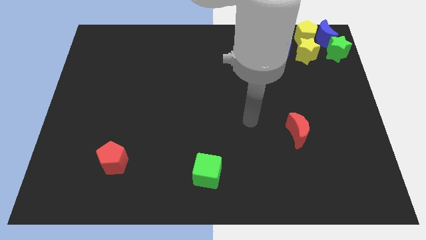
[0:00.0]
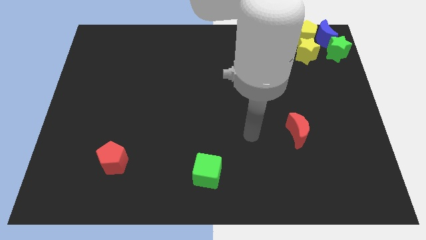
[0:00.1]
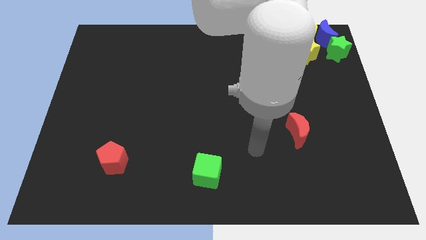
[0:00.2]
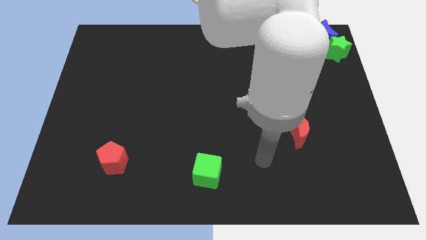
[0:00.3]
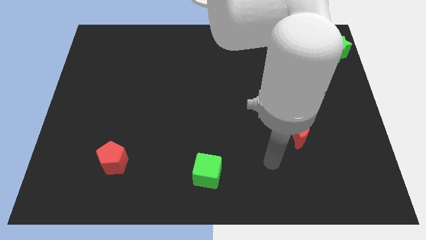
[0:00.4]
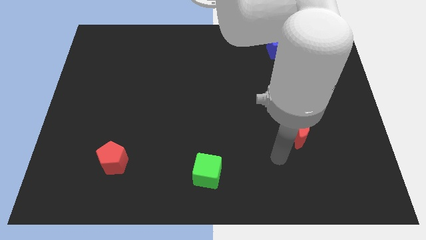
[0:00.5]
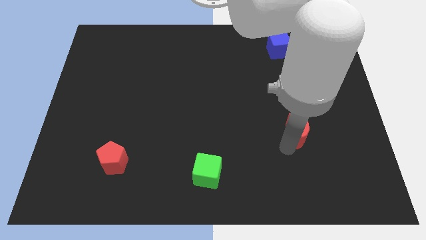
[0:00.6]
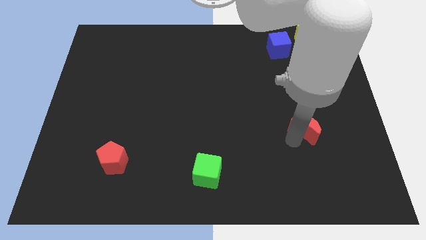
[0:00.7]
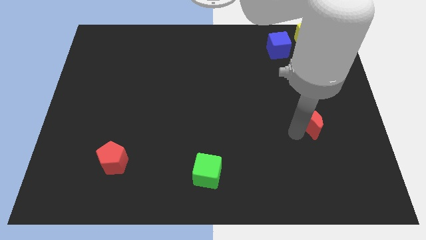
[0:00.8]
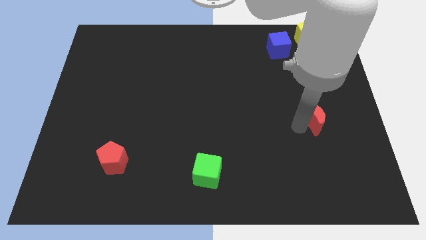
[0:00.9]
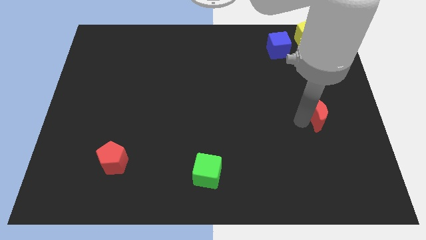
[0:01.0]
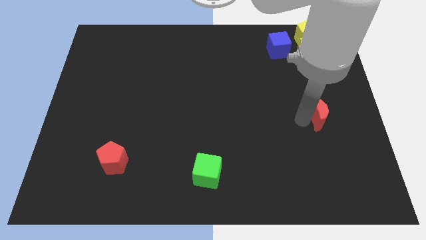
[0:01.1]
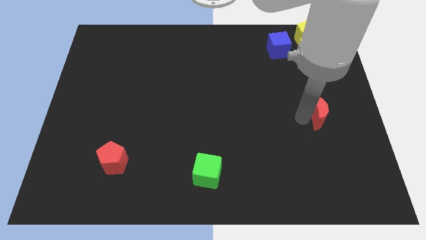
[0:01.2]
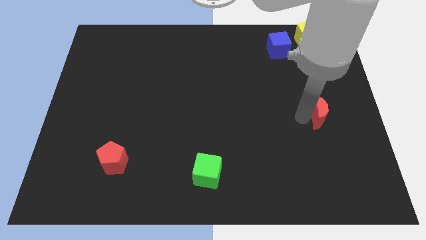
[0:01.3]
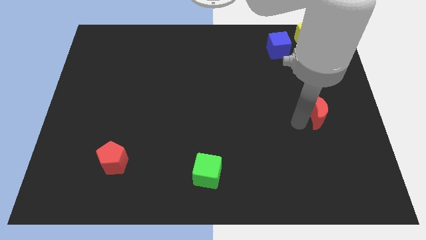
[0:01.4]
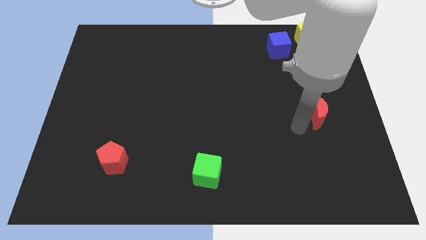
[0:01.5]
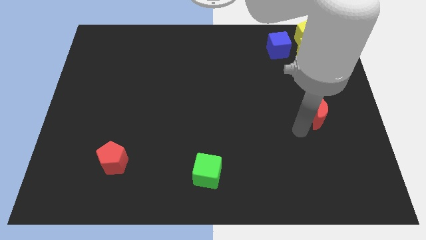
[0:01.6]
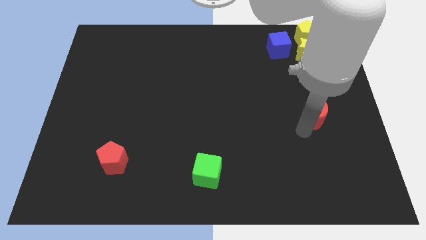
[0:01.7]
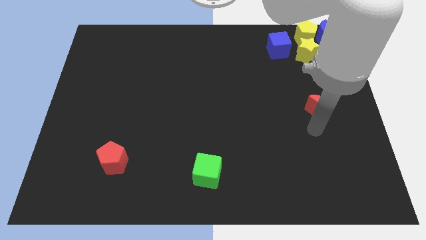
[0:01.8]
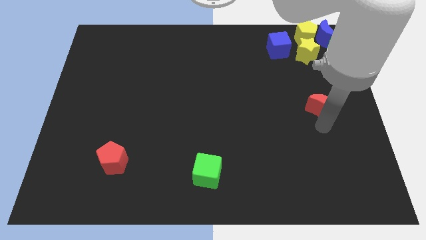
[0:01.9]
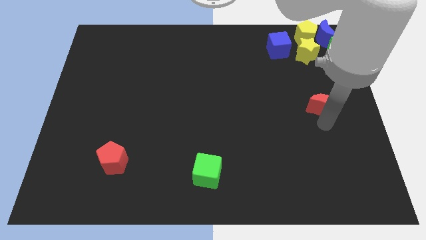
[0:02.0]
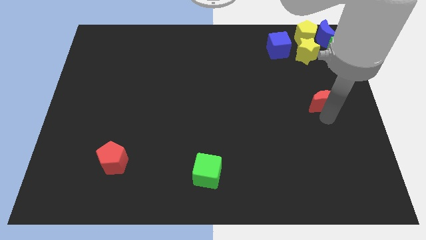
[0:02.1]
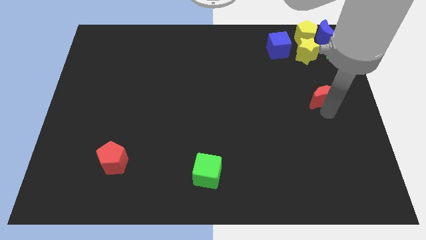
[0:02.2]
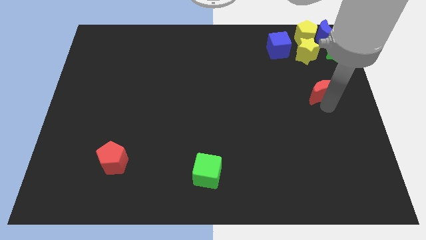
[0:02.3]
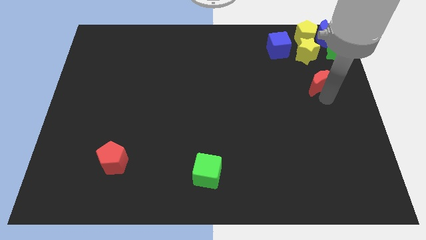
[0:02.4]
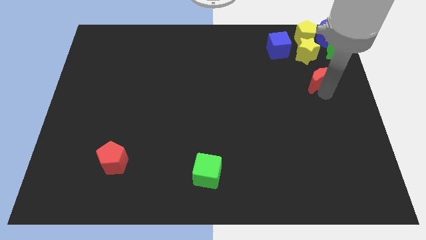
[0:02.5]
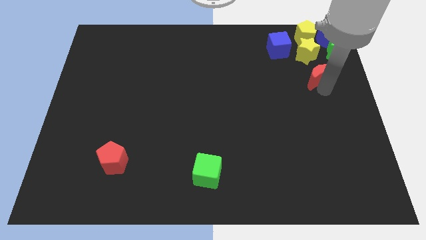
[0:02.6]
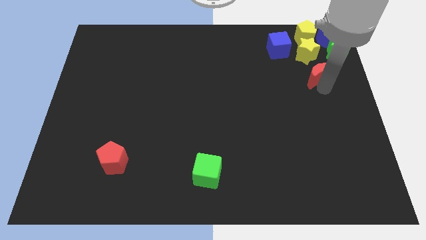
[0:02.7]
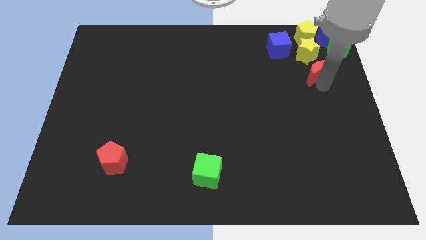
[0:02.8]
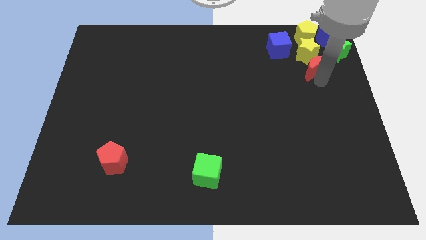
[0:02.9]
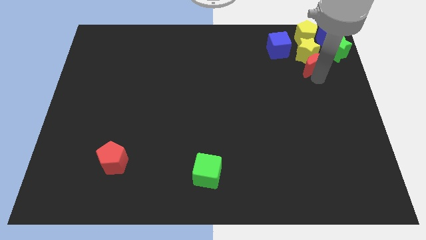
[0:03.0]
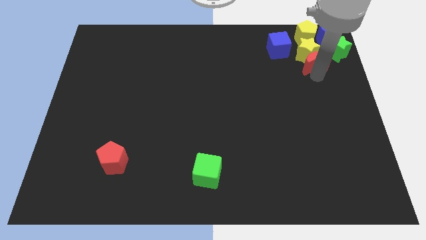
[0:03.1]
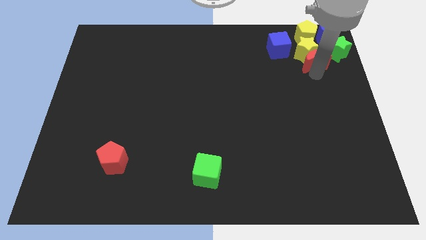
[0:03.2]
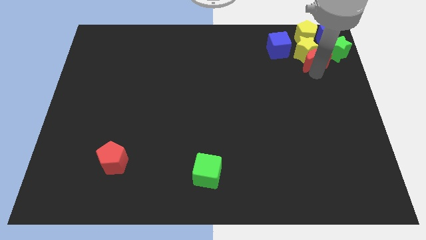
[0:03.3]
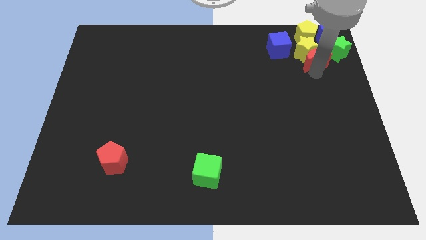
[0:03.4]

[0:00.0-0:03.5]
push the red moon block into the yellow star

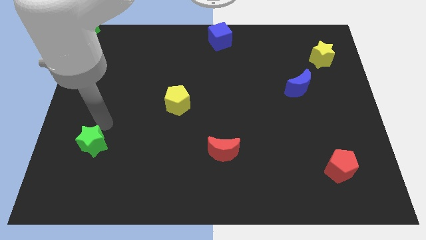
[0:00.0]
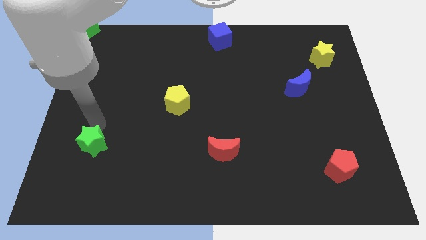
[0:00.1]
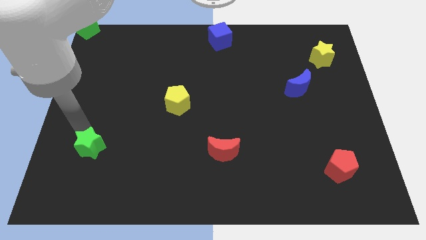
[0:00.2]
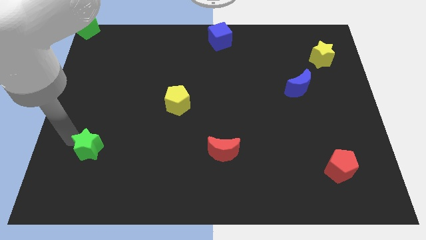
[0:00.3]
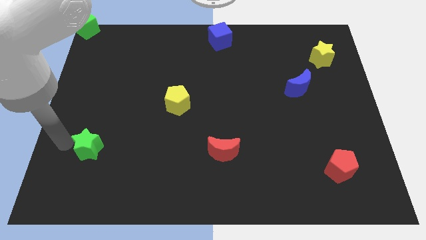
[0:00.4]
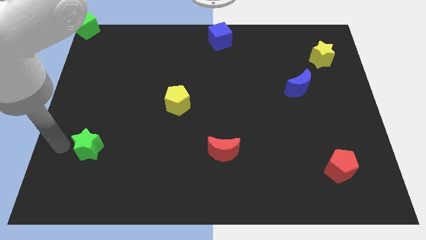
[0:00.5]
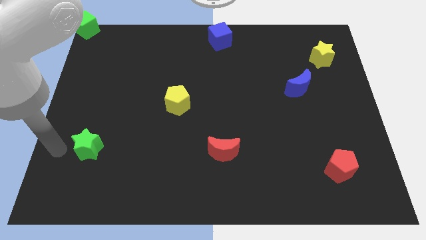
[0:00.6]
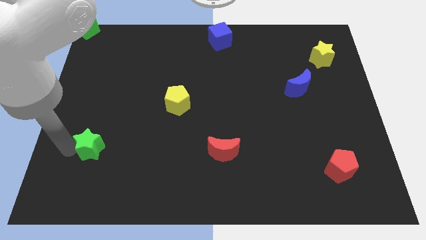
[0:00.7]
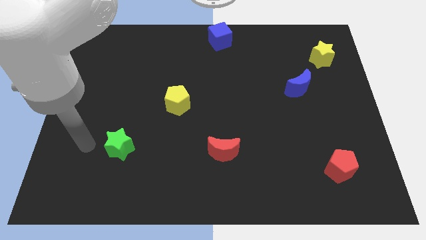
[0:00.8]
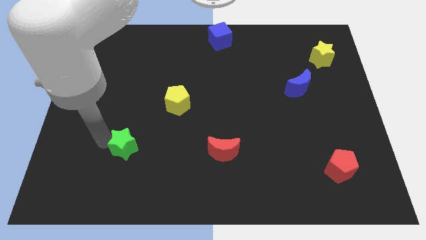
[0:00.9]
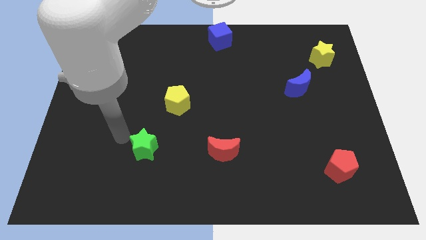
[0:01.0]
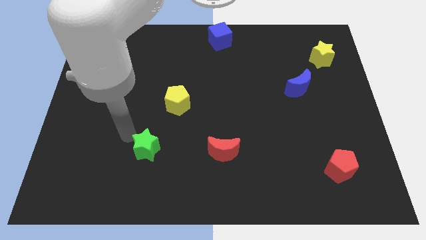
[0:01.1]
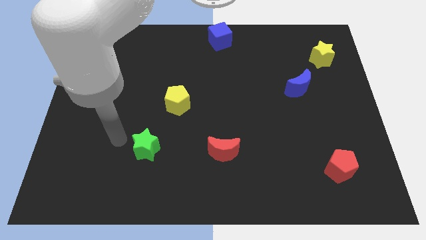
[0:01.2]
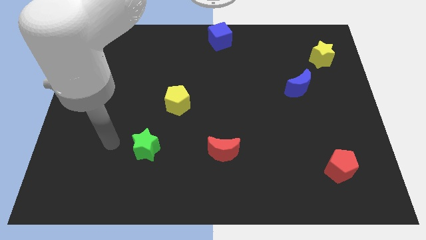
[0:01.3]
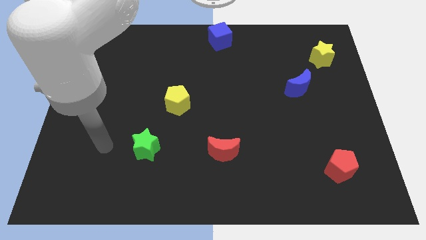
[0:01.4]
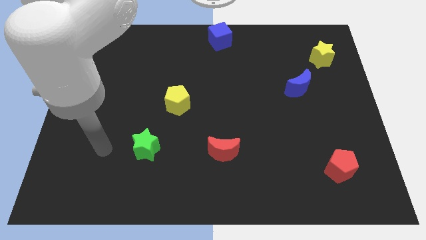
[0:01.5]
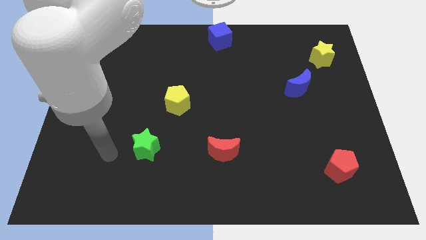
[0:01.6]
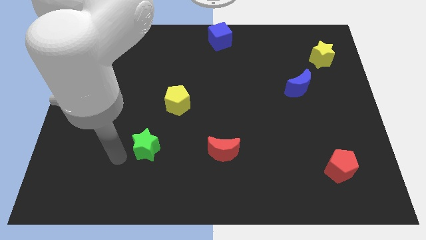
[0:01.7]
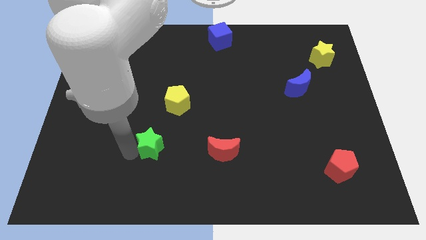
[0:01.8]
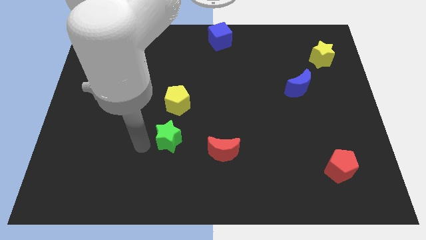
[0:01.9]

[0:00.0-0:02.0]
push green star below yellow pentagon

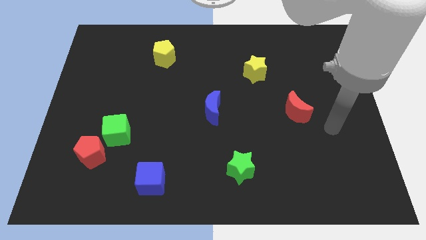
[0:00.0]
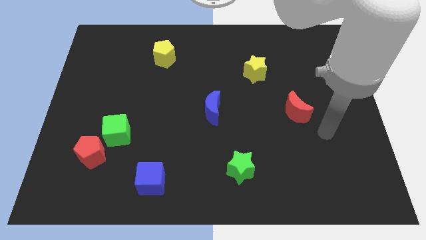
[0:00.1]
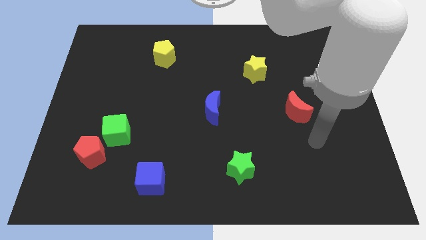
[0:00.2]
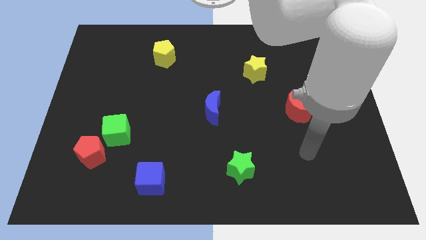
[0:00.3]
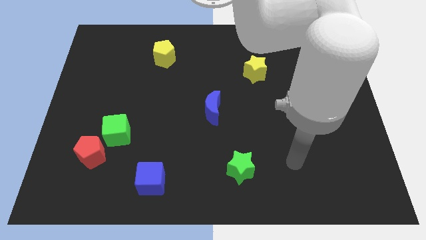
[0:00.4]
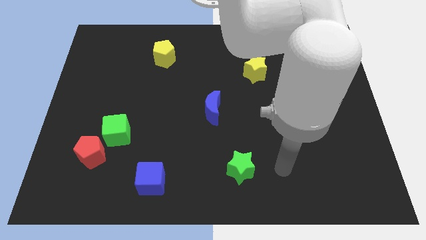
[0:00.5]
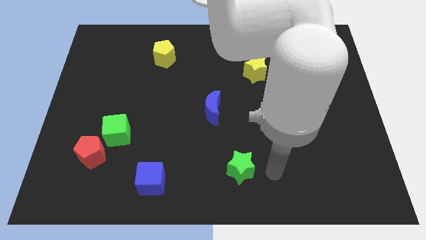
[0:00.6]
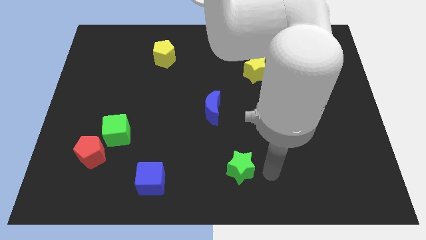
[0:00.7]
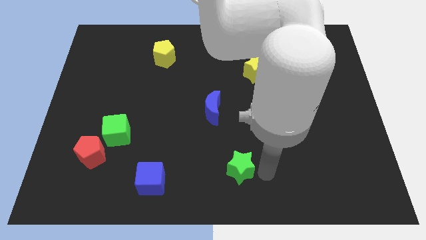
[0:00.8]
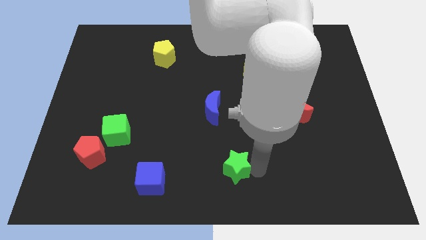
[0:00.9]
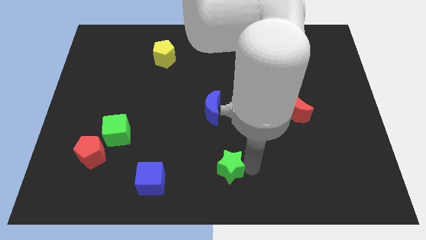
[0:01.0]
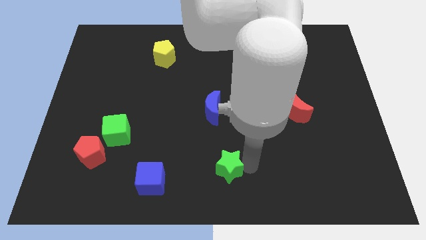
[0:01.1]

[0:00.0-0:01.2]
push the green star slightly to the left side of the board

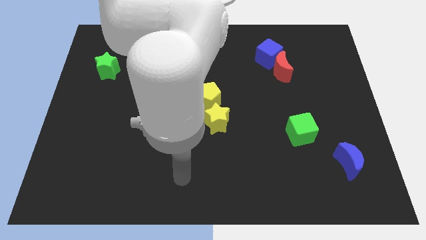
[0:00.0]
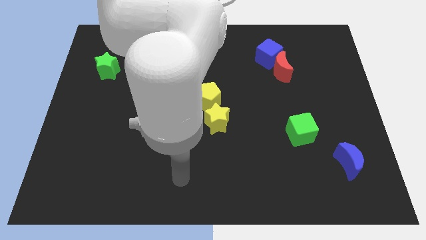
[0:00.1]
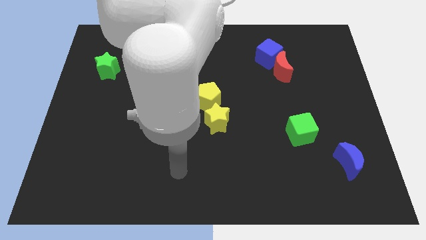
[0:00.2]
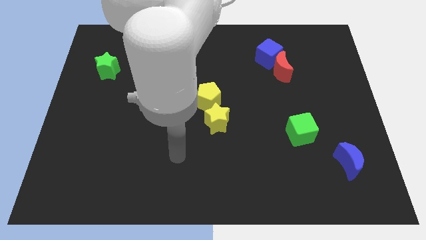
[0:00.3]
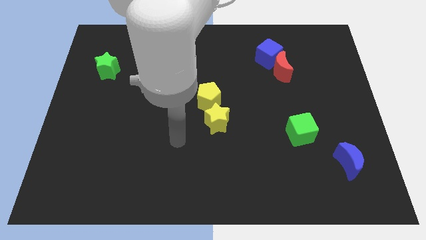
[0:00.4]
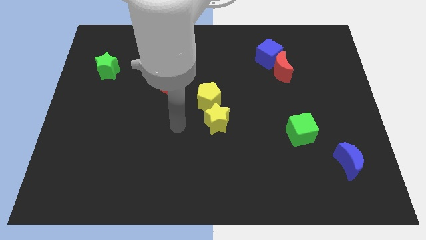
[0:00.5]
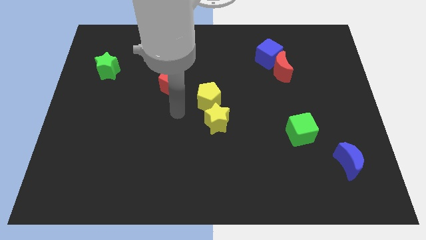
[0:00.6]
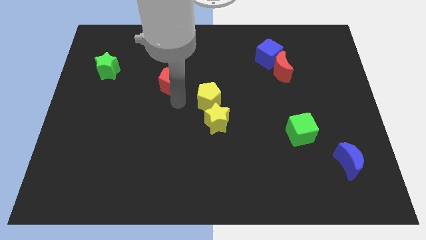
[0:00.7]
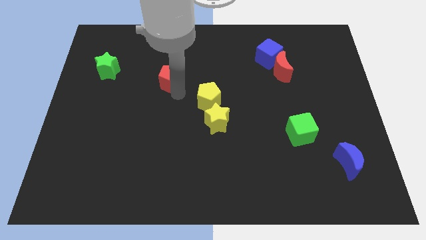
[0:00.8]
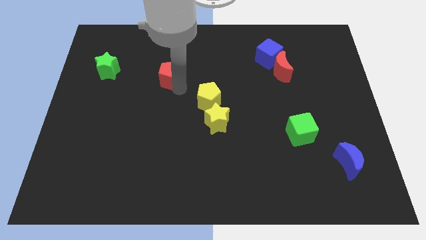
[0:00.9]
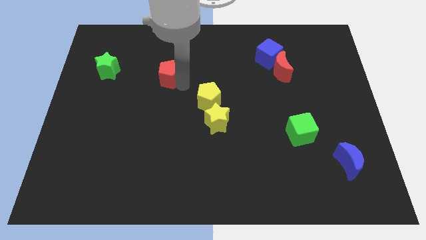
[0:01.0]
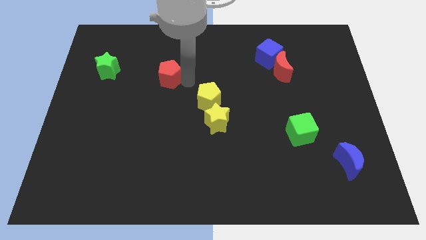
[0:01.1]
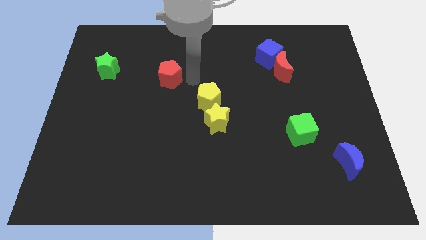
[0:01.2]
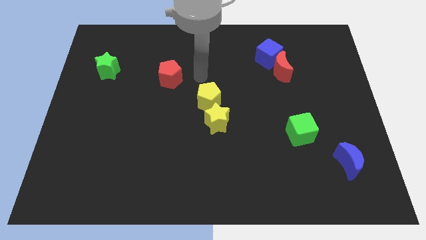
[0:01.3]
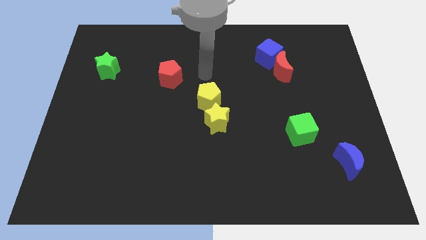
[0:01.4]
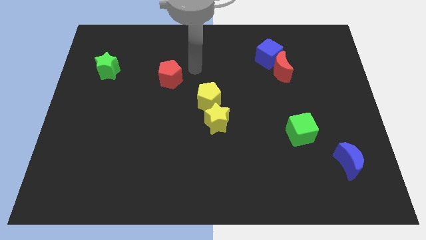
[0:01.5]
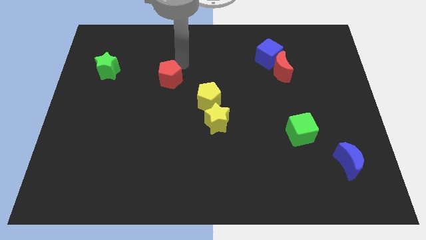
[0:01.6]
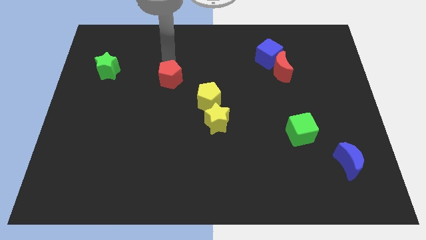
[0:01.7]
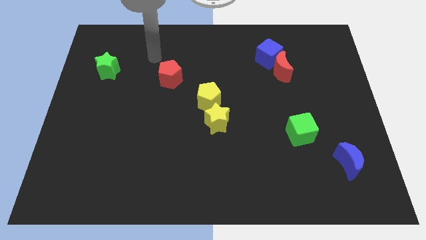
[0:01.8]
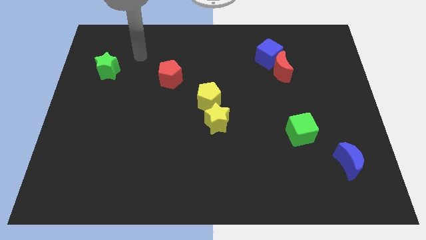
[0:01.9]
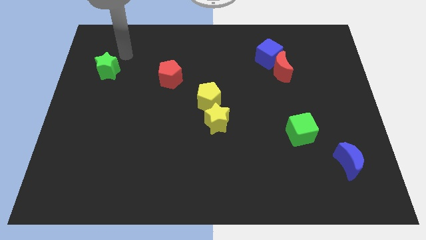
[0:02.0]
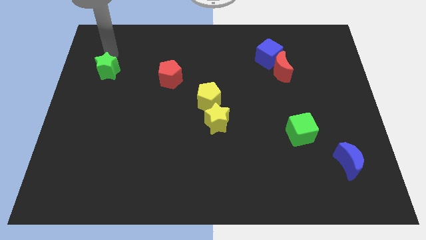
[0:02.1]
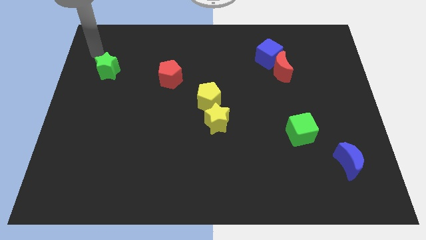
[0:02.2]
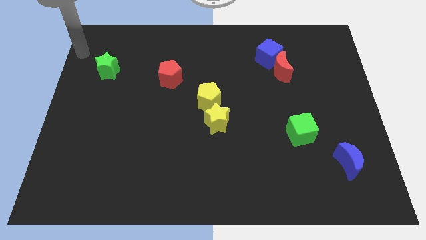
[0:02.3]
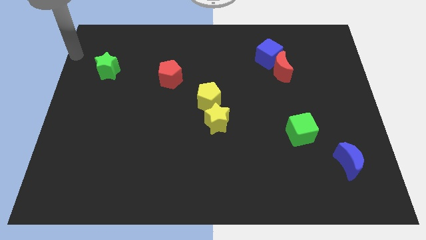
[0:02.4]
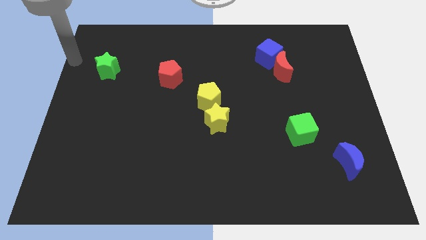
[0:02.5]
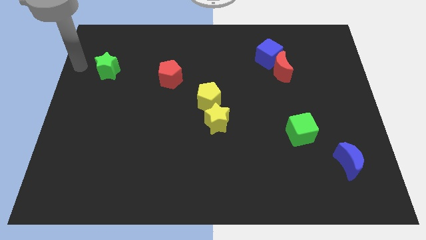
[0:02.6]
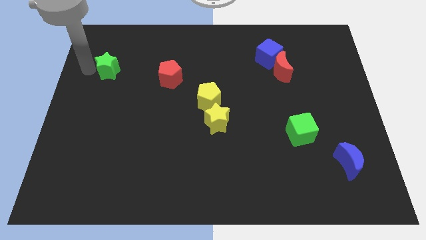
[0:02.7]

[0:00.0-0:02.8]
move your arm to the left side of the board
